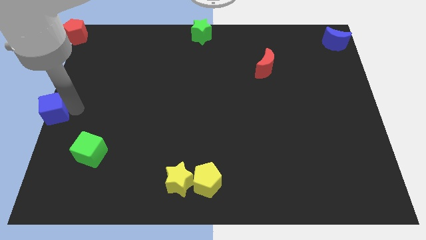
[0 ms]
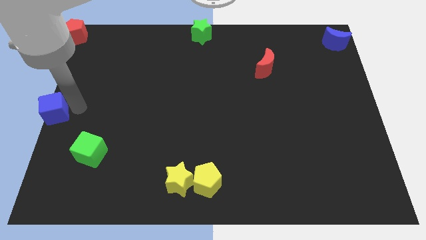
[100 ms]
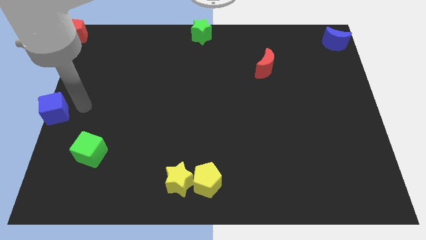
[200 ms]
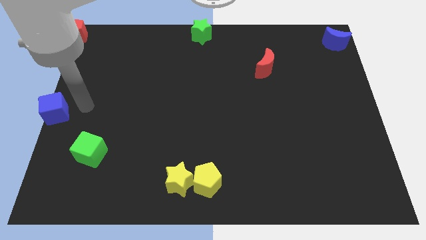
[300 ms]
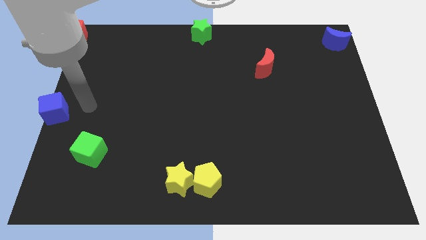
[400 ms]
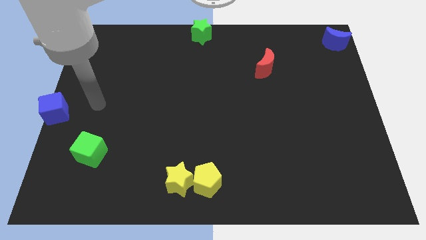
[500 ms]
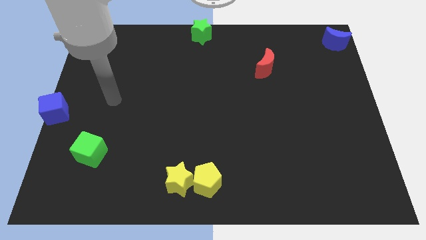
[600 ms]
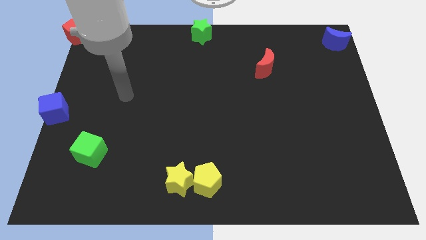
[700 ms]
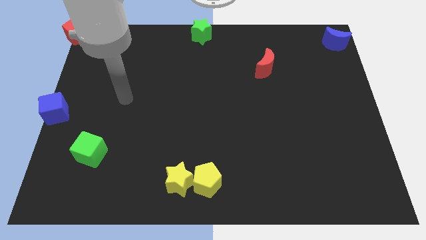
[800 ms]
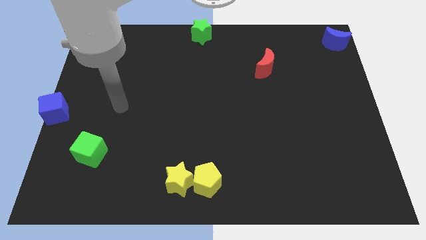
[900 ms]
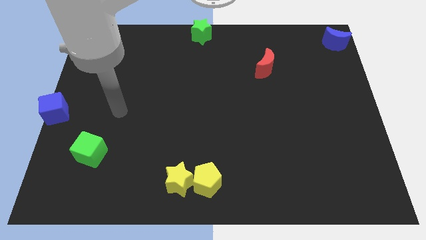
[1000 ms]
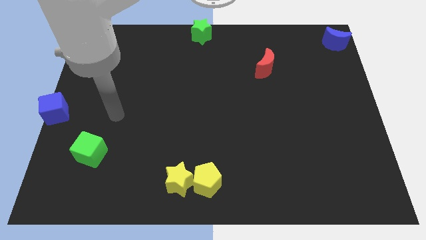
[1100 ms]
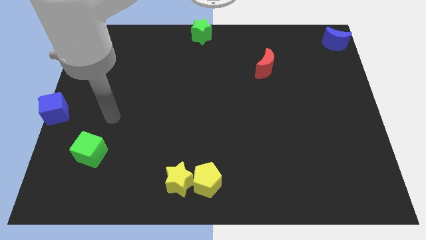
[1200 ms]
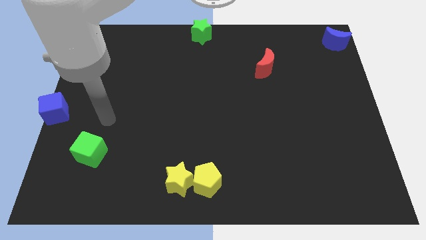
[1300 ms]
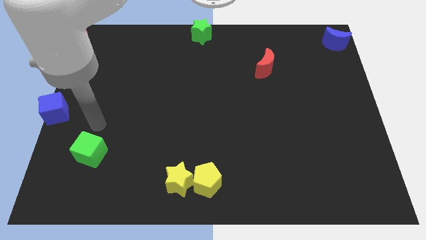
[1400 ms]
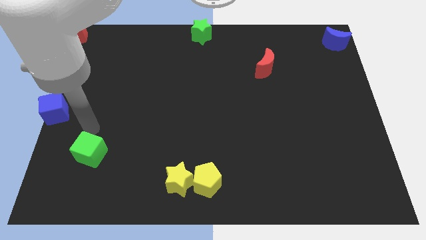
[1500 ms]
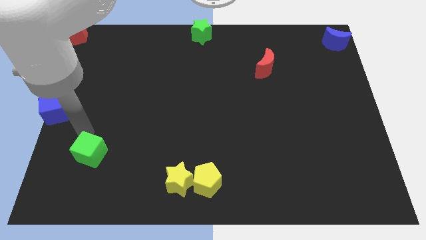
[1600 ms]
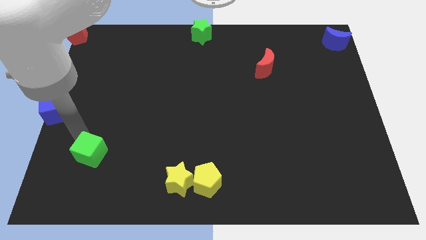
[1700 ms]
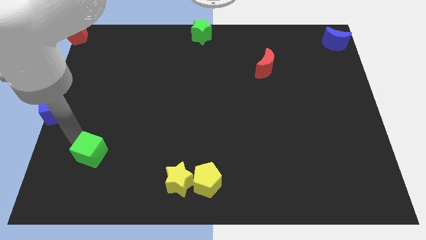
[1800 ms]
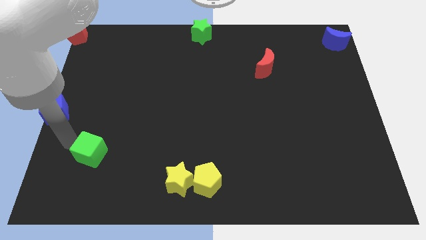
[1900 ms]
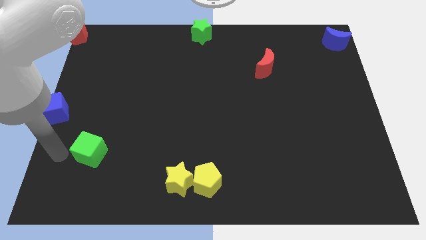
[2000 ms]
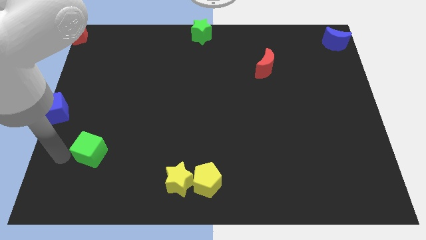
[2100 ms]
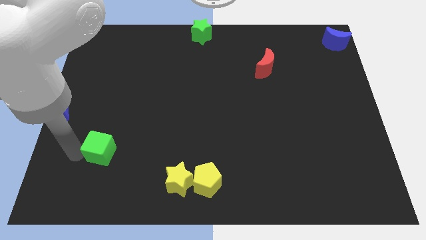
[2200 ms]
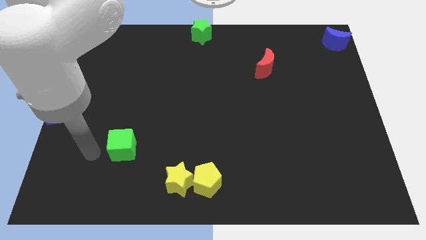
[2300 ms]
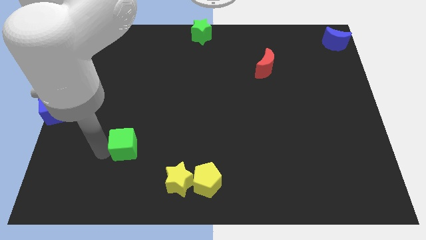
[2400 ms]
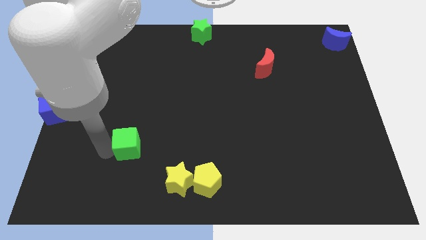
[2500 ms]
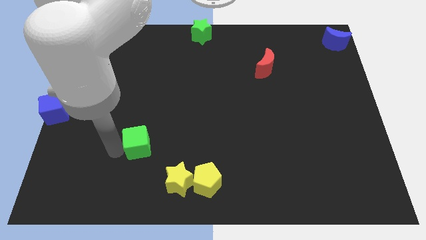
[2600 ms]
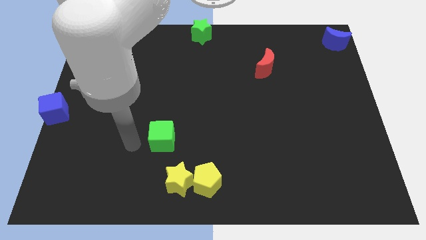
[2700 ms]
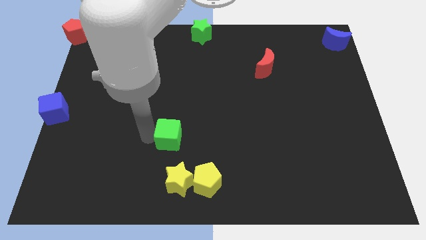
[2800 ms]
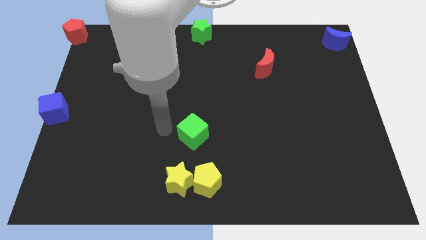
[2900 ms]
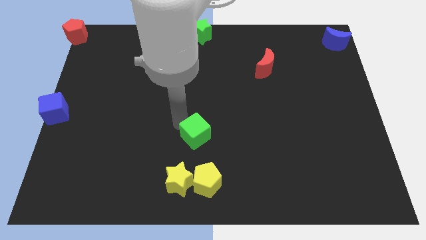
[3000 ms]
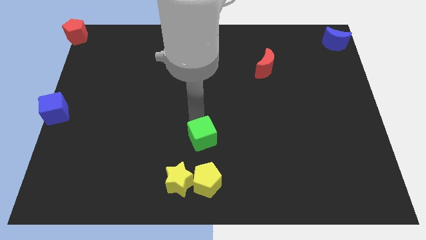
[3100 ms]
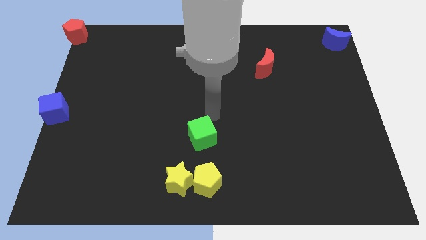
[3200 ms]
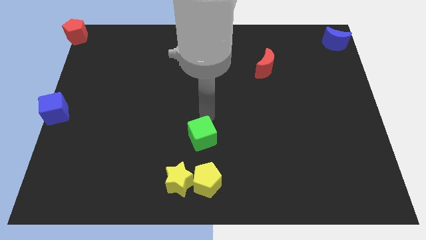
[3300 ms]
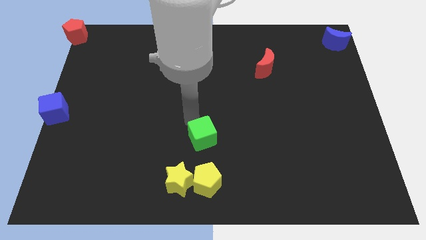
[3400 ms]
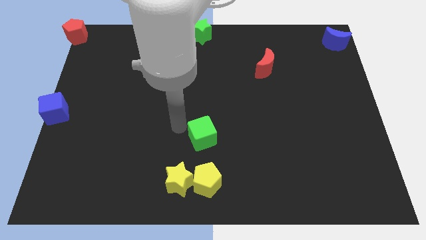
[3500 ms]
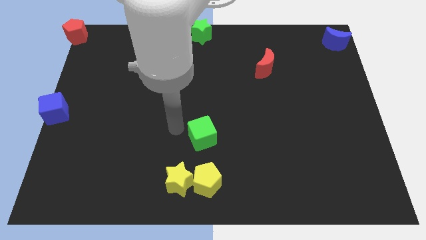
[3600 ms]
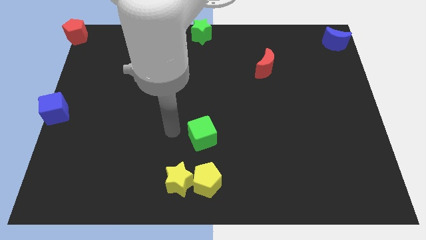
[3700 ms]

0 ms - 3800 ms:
place the green cube above the yellow pentagon

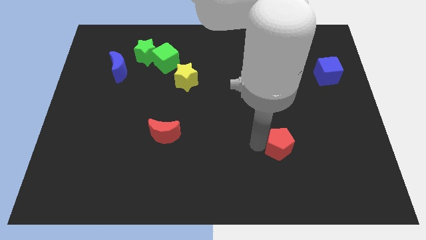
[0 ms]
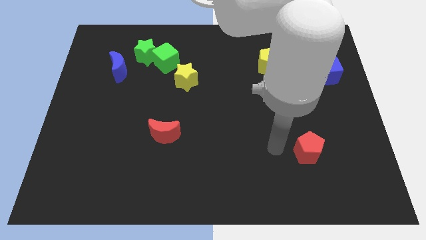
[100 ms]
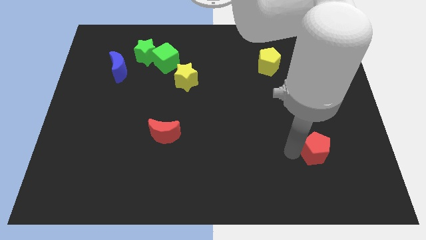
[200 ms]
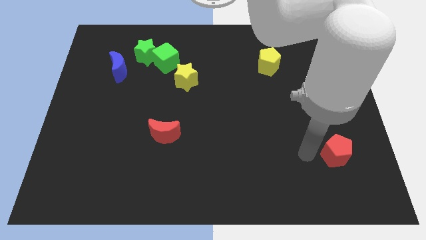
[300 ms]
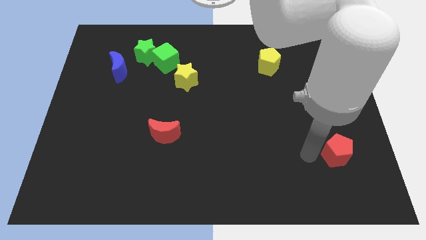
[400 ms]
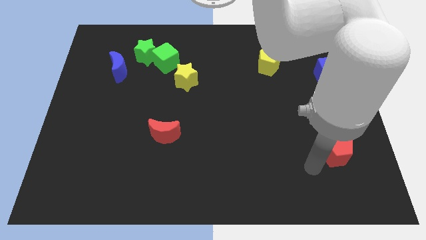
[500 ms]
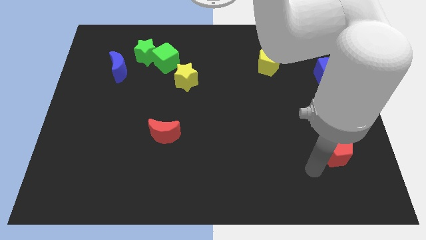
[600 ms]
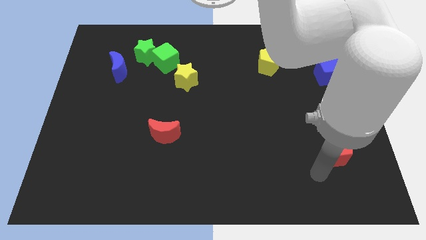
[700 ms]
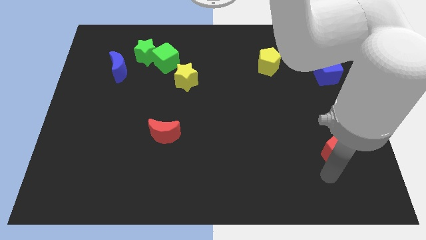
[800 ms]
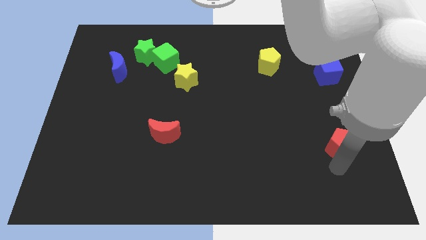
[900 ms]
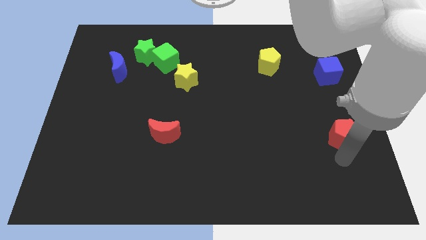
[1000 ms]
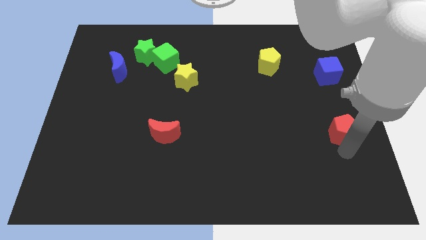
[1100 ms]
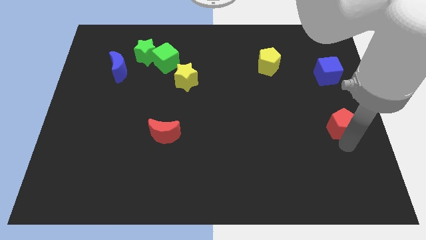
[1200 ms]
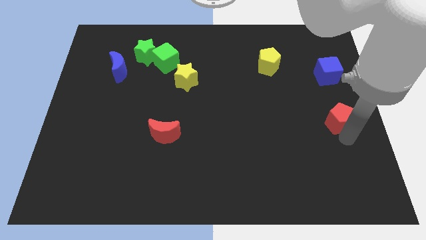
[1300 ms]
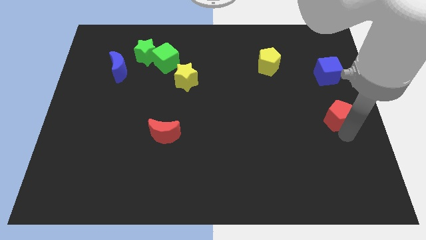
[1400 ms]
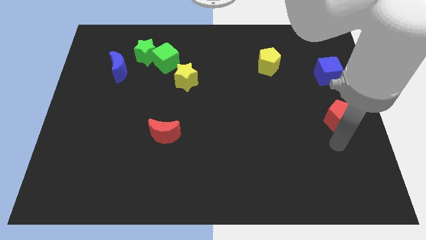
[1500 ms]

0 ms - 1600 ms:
place the red pentagon below the blue cube

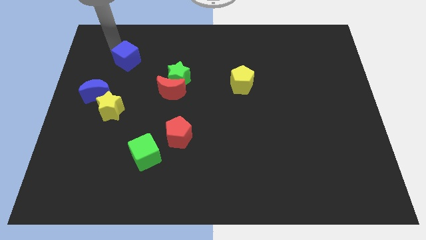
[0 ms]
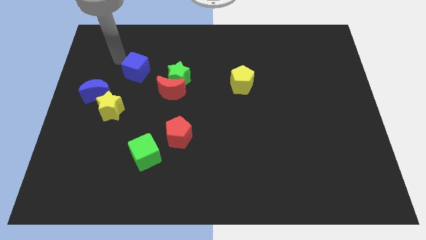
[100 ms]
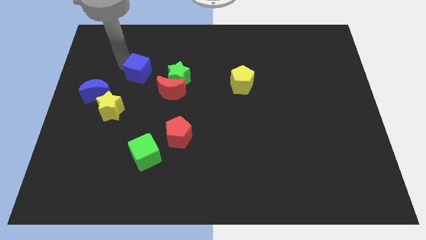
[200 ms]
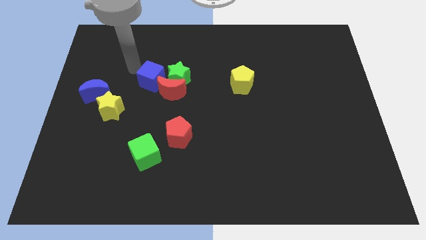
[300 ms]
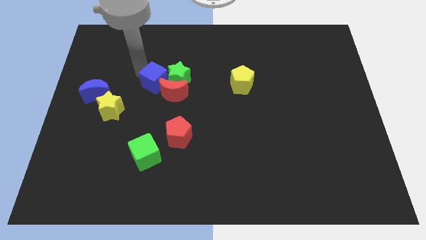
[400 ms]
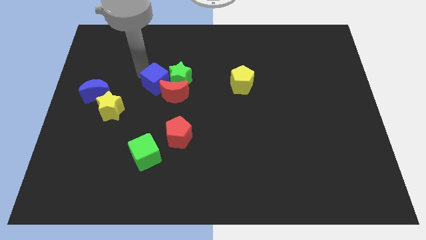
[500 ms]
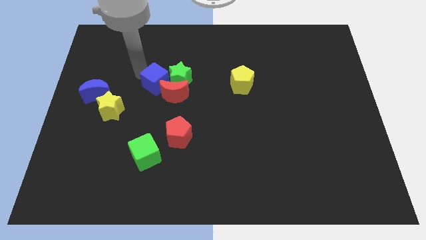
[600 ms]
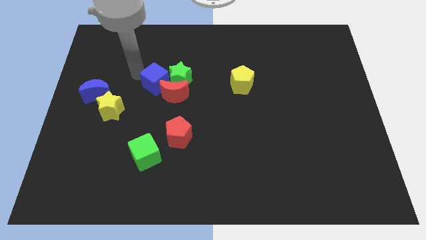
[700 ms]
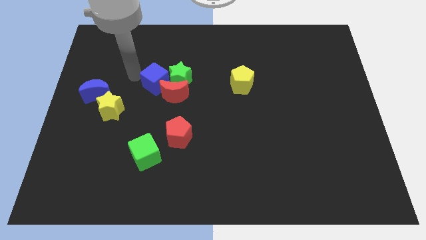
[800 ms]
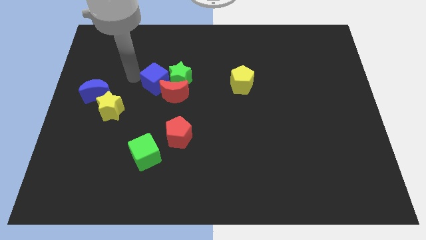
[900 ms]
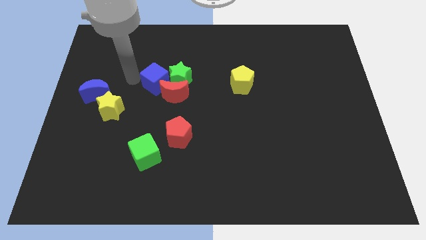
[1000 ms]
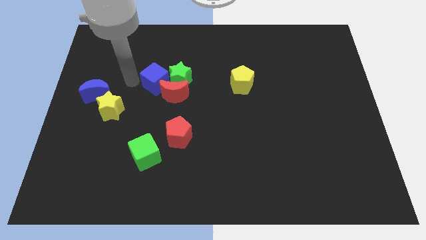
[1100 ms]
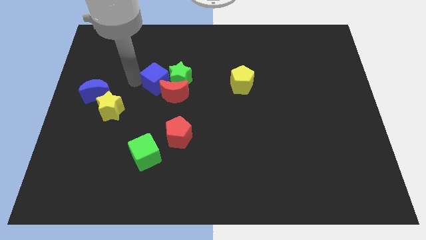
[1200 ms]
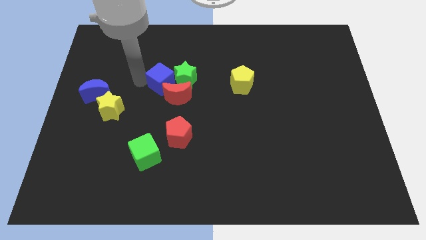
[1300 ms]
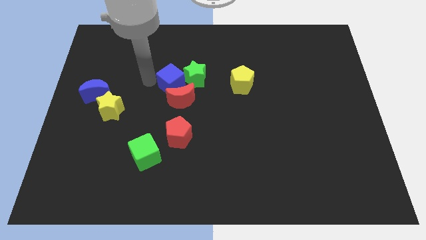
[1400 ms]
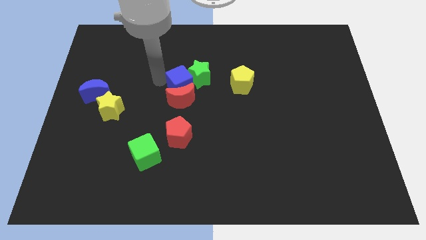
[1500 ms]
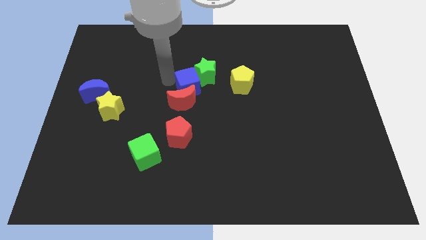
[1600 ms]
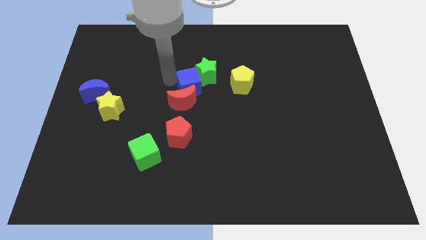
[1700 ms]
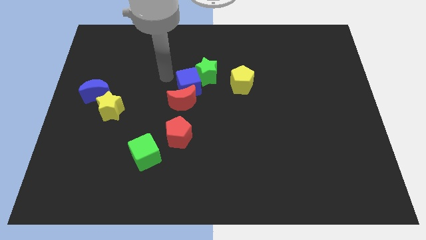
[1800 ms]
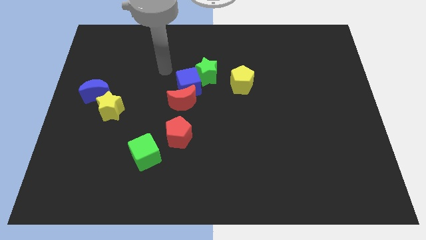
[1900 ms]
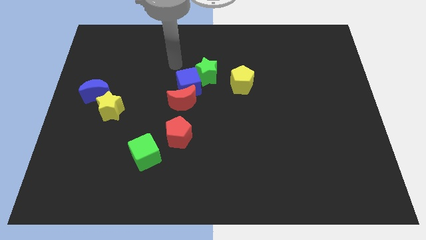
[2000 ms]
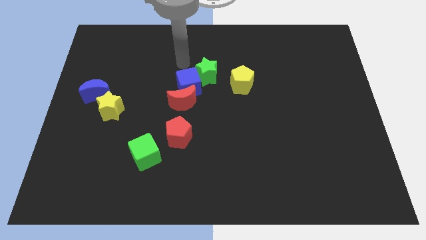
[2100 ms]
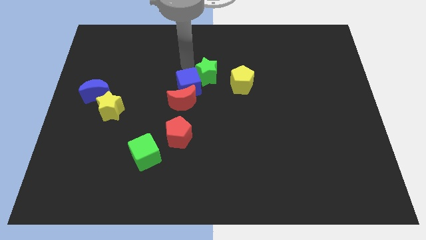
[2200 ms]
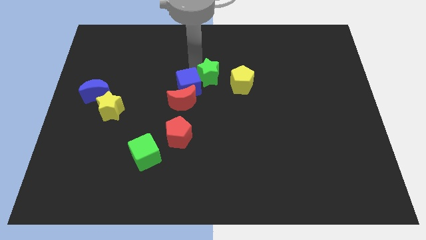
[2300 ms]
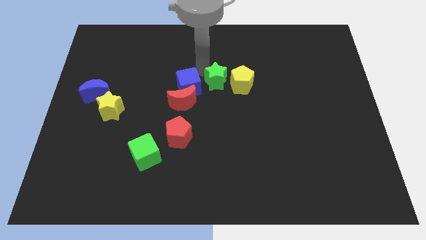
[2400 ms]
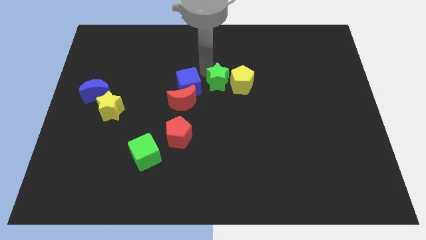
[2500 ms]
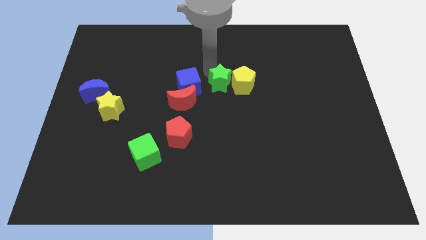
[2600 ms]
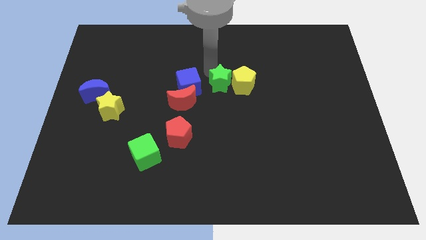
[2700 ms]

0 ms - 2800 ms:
place the green star left to the yellow pentagon

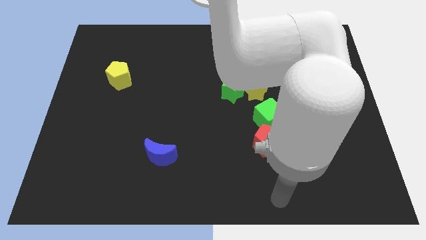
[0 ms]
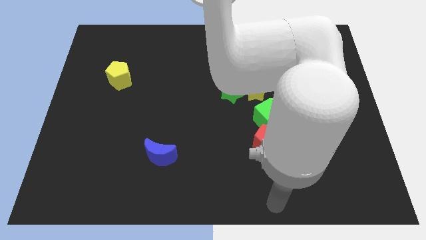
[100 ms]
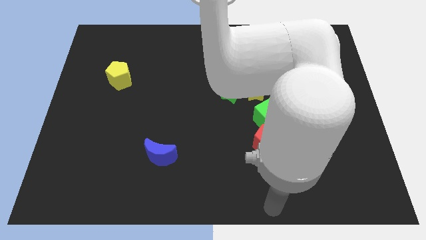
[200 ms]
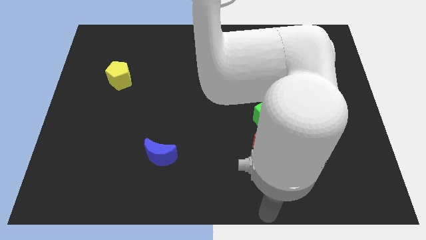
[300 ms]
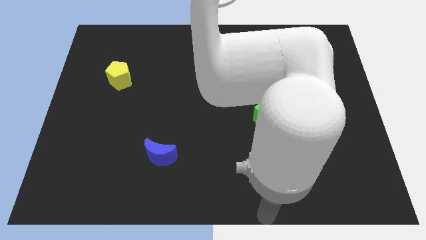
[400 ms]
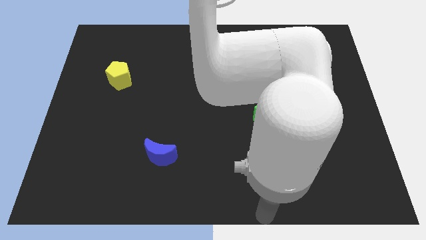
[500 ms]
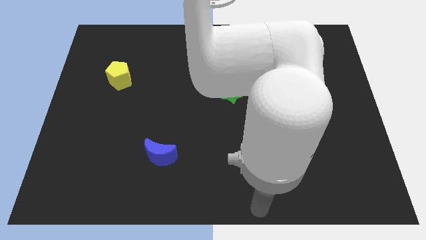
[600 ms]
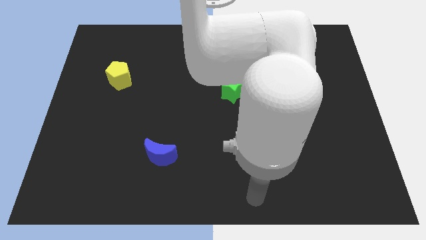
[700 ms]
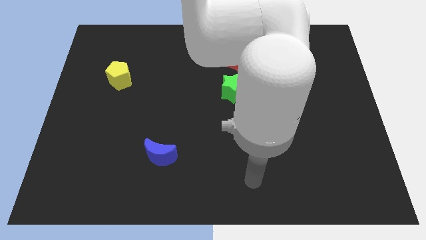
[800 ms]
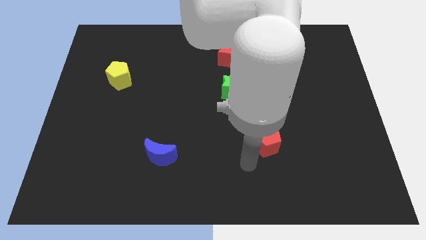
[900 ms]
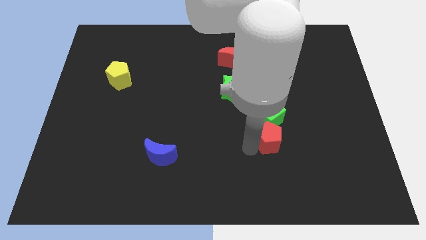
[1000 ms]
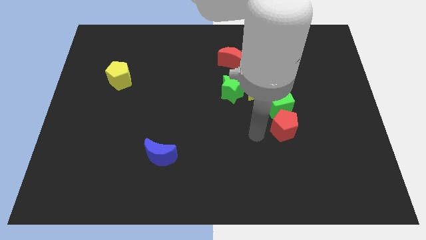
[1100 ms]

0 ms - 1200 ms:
push the green cube with the red pentagon towards the right center of the board
